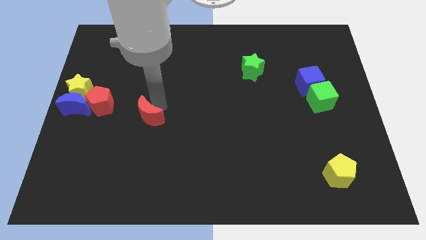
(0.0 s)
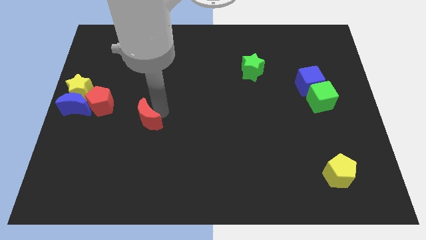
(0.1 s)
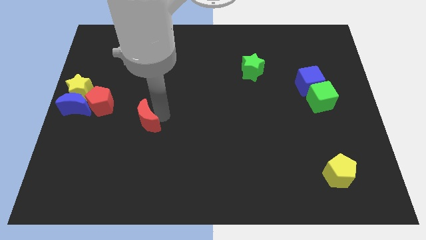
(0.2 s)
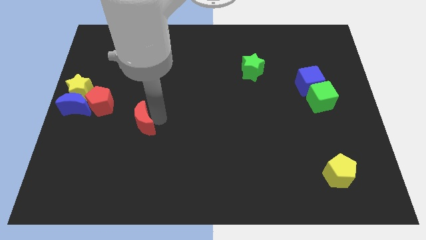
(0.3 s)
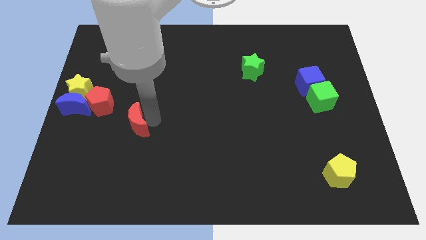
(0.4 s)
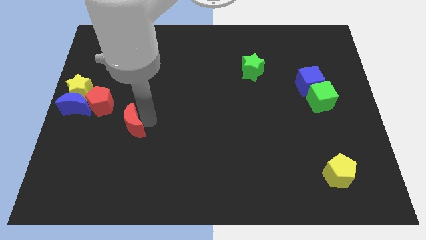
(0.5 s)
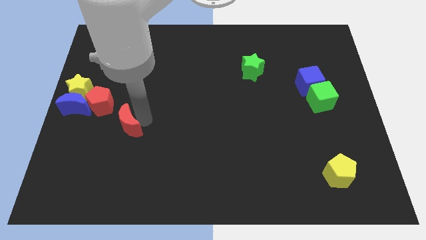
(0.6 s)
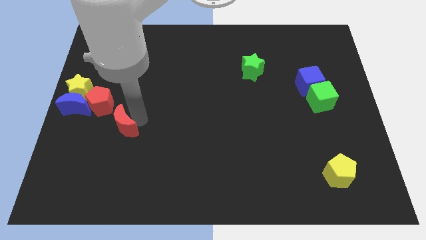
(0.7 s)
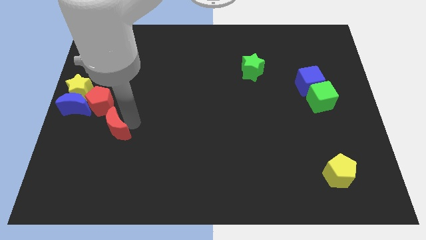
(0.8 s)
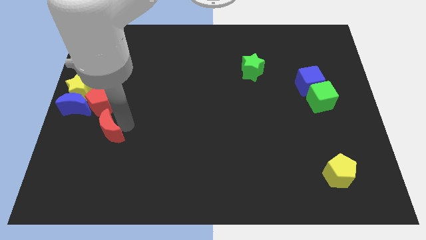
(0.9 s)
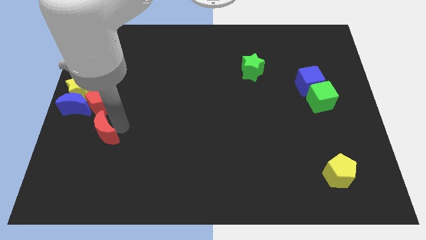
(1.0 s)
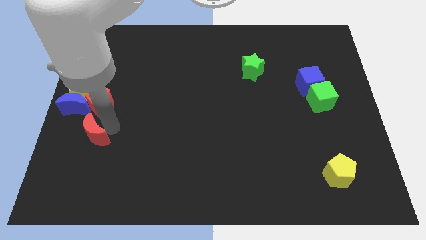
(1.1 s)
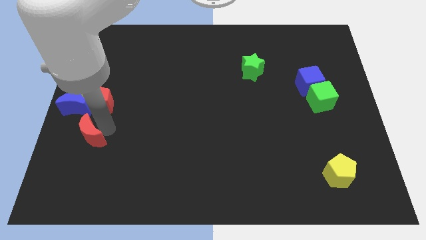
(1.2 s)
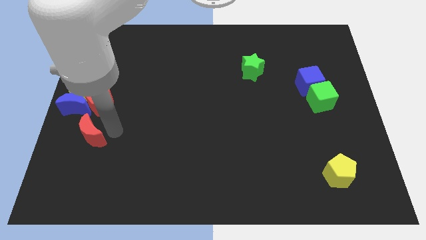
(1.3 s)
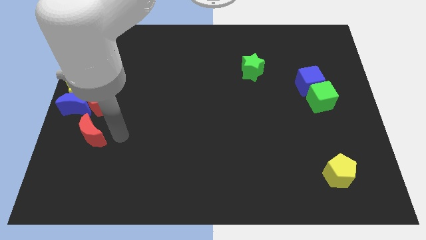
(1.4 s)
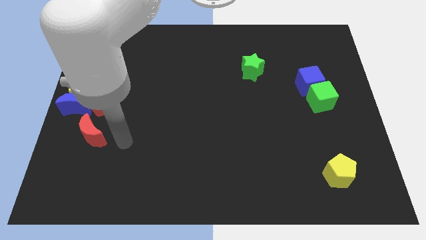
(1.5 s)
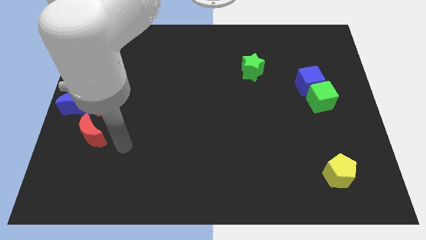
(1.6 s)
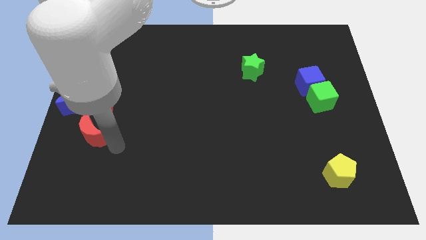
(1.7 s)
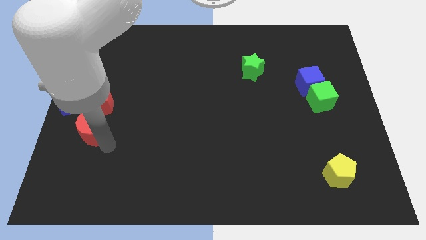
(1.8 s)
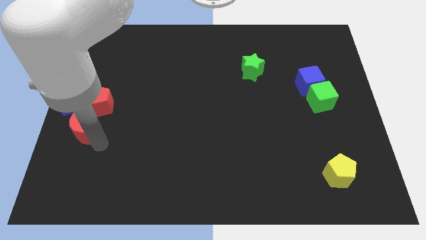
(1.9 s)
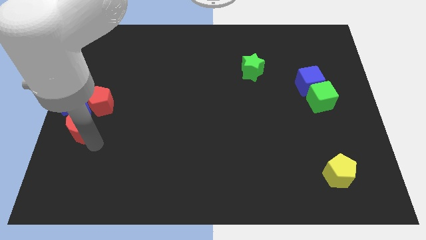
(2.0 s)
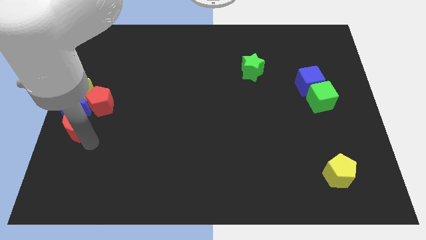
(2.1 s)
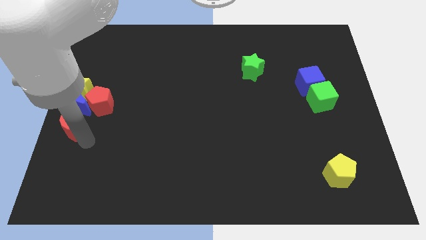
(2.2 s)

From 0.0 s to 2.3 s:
place the red moon below the blue moon

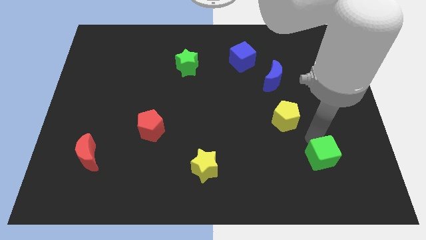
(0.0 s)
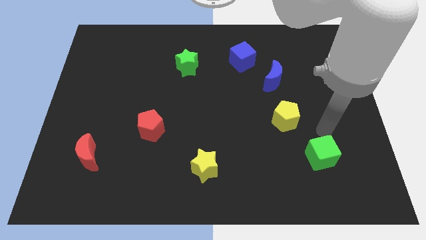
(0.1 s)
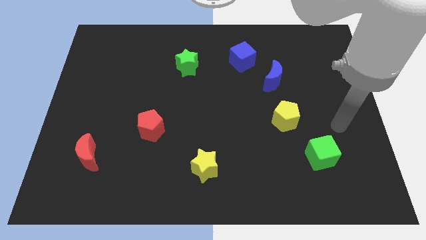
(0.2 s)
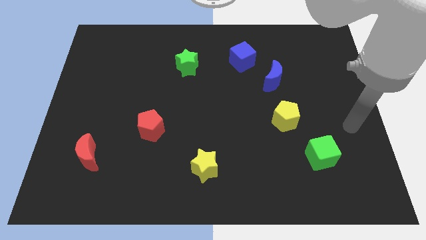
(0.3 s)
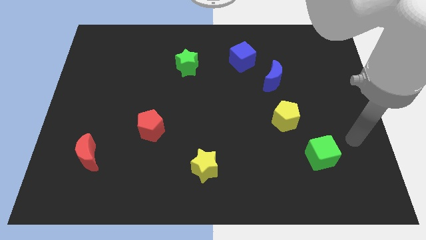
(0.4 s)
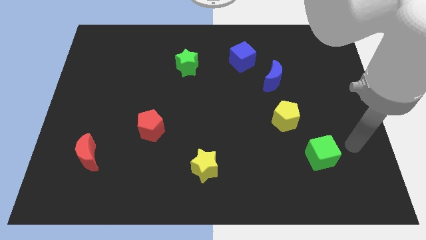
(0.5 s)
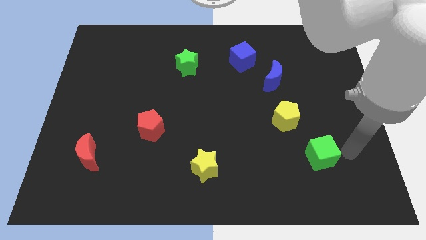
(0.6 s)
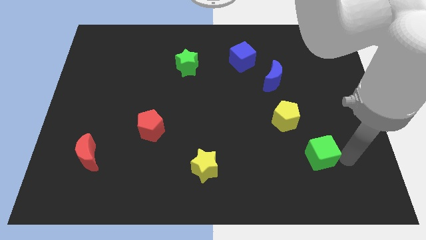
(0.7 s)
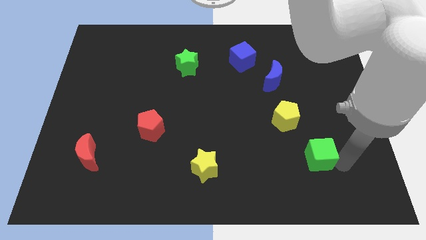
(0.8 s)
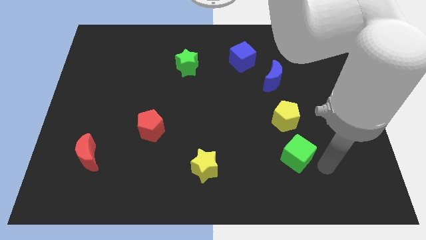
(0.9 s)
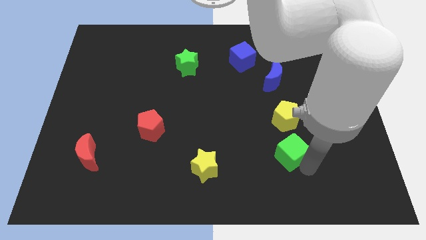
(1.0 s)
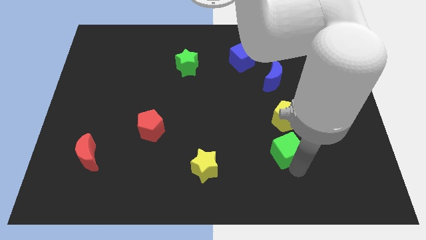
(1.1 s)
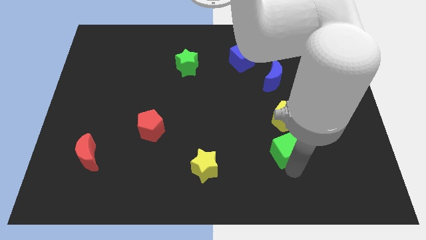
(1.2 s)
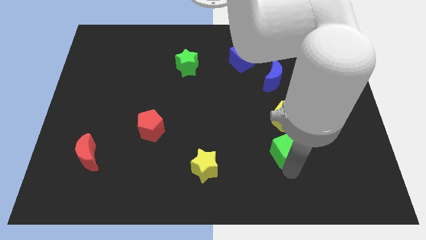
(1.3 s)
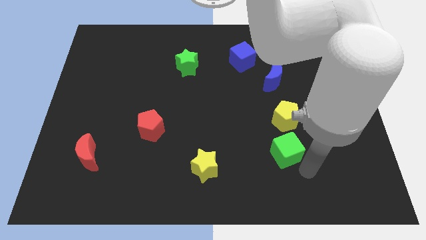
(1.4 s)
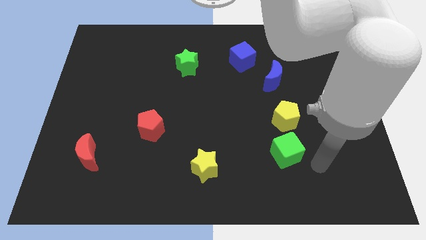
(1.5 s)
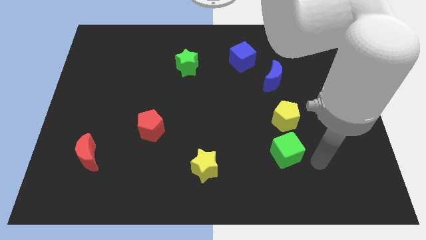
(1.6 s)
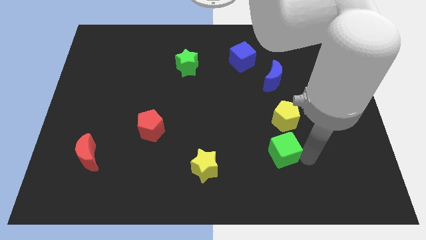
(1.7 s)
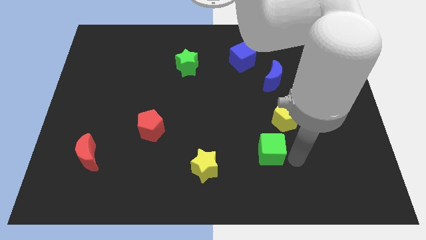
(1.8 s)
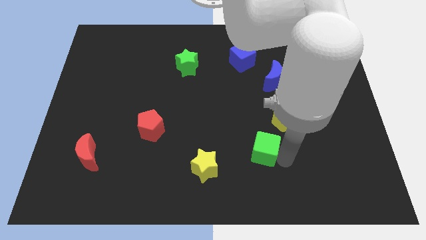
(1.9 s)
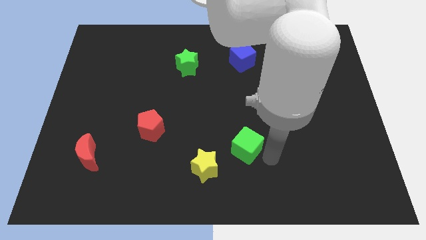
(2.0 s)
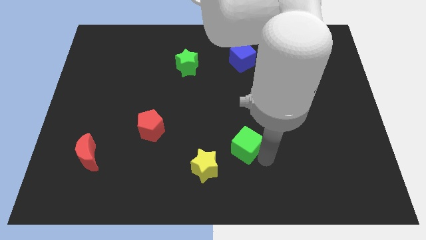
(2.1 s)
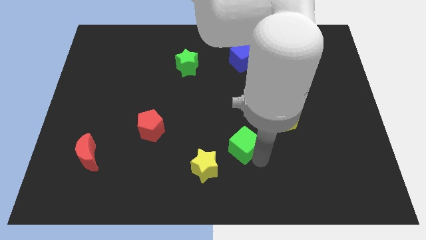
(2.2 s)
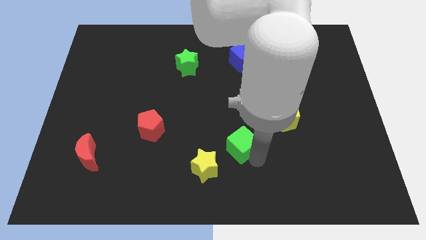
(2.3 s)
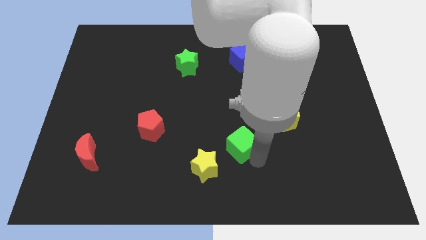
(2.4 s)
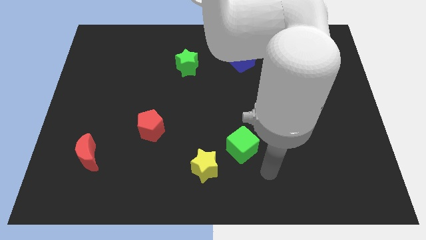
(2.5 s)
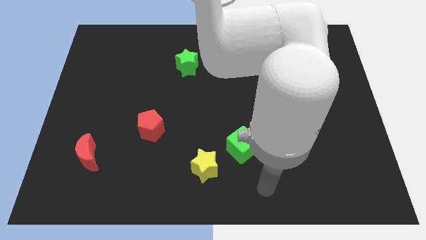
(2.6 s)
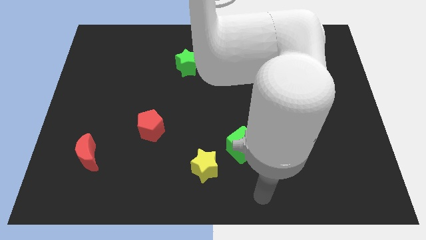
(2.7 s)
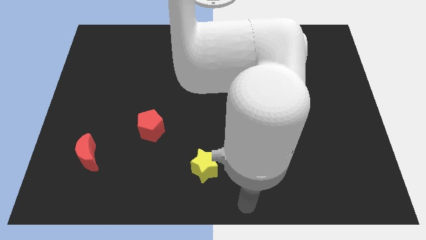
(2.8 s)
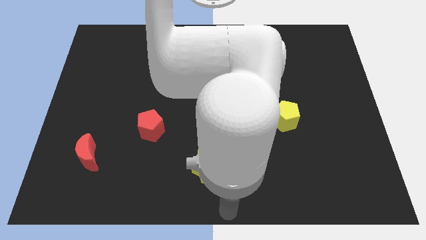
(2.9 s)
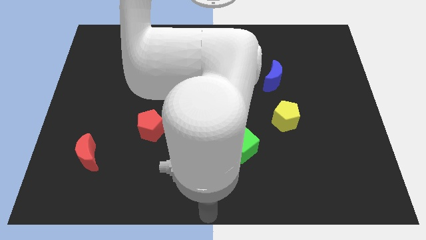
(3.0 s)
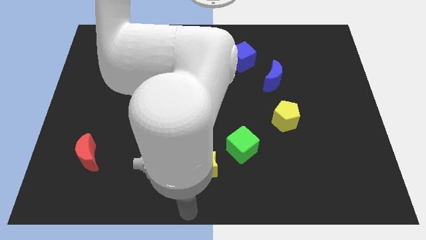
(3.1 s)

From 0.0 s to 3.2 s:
move the green cube to the right of the yellow star

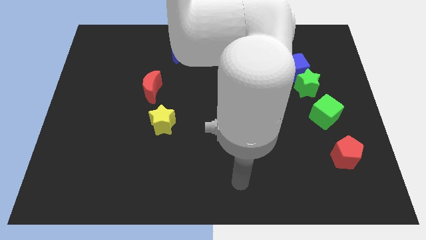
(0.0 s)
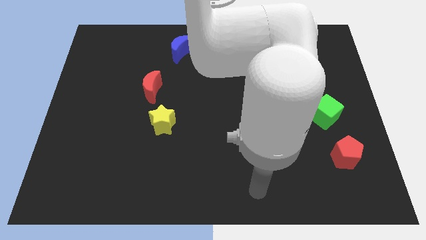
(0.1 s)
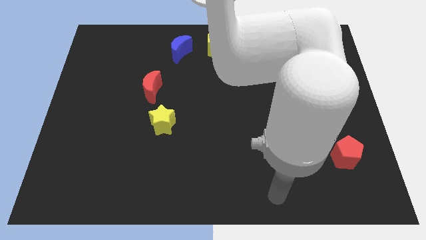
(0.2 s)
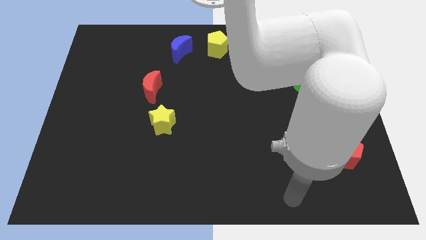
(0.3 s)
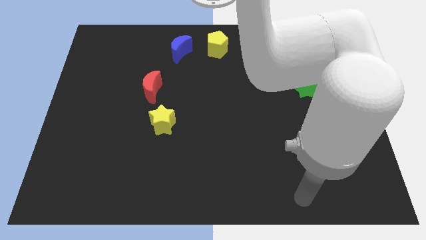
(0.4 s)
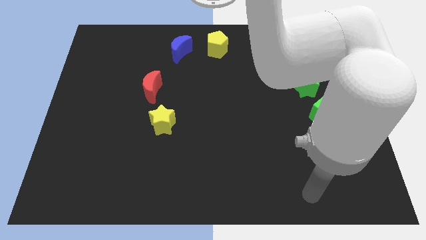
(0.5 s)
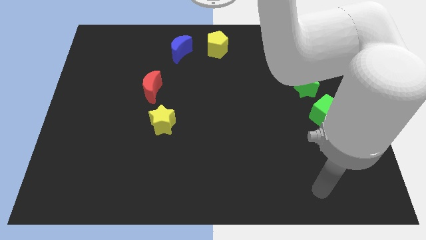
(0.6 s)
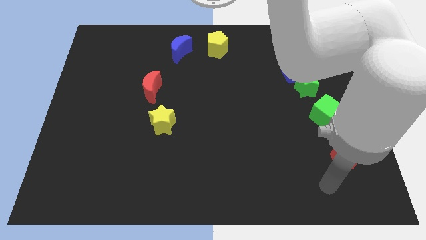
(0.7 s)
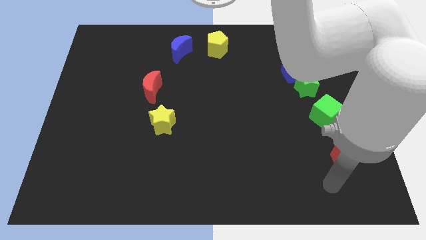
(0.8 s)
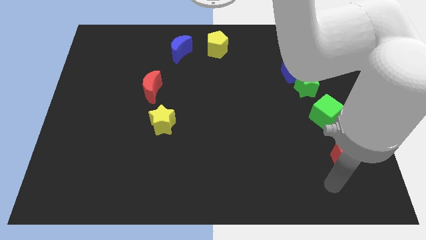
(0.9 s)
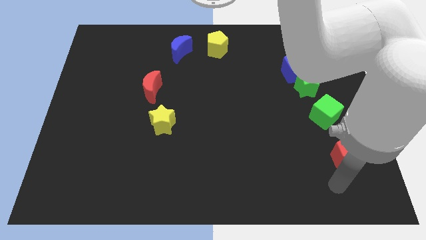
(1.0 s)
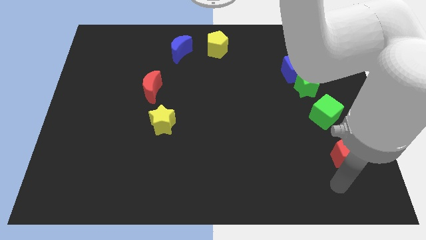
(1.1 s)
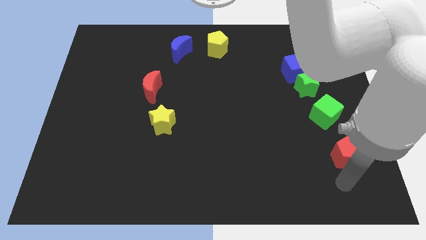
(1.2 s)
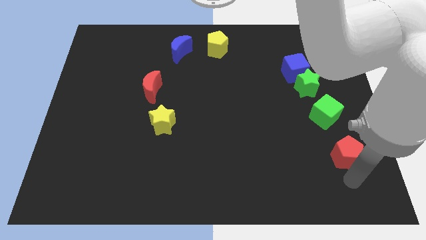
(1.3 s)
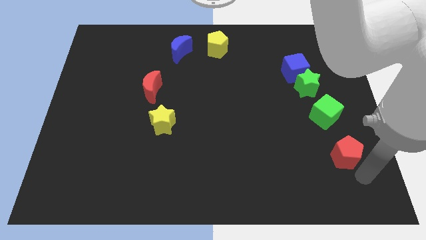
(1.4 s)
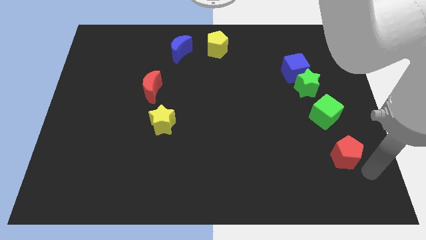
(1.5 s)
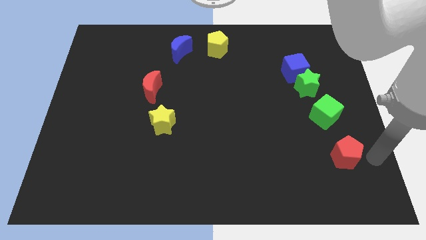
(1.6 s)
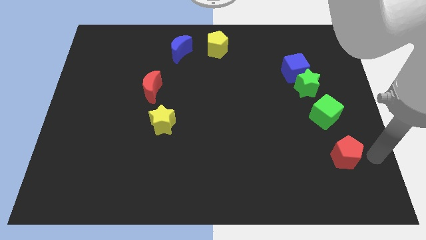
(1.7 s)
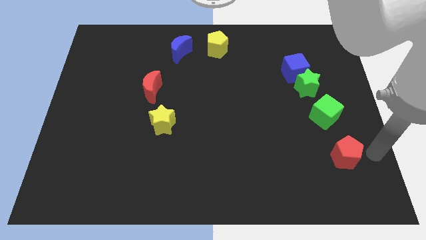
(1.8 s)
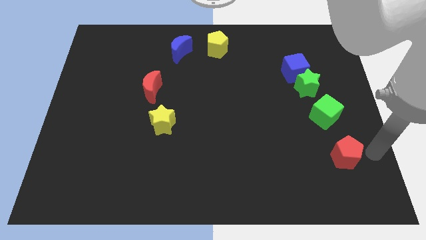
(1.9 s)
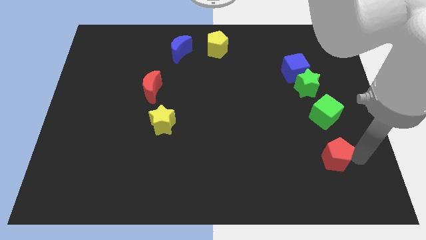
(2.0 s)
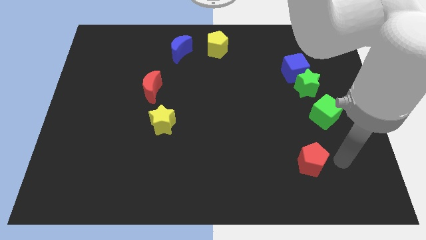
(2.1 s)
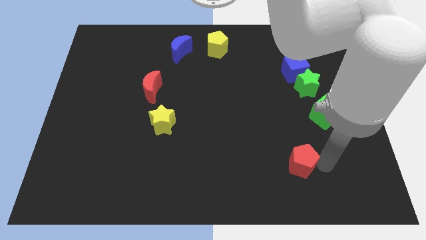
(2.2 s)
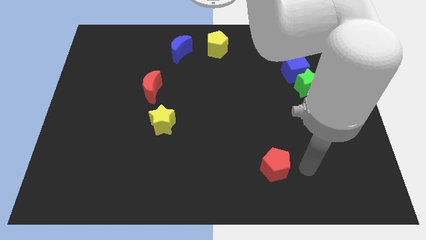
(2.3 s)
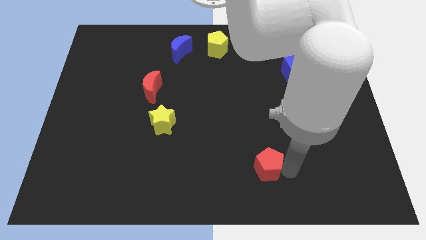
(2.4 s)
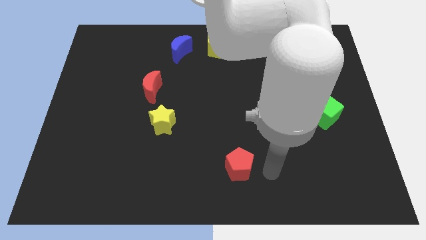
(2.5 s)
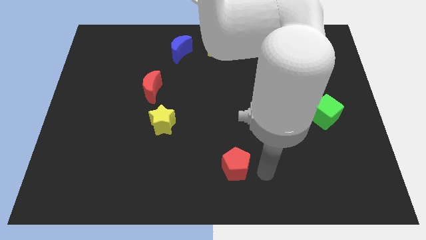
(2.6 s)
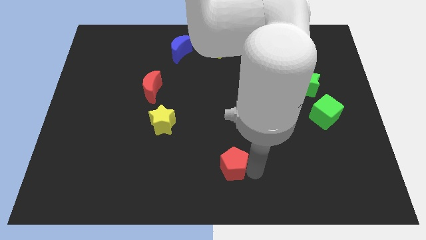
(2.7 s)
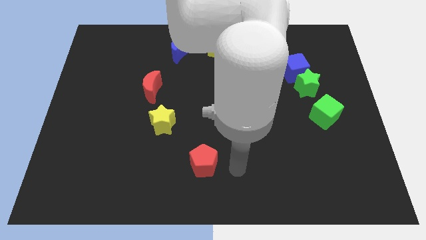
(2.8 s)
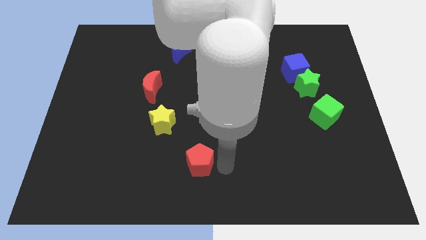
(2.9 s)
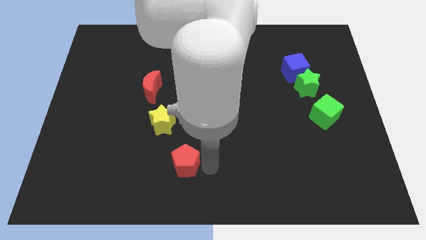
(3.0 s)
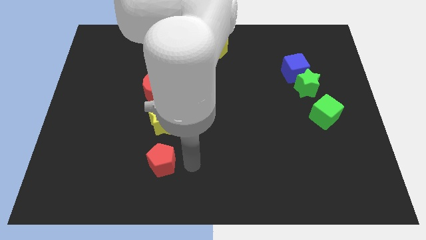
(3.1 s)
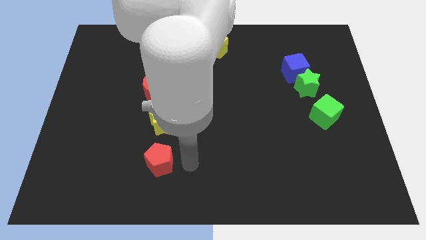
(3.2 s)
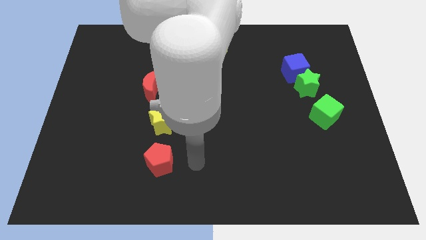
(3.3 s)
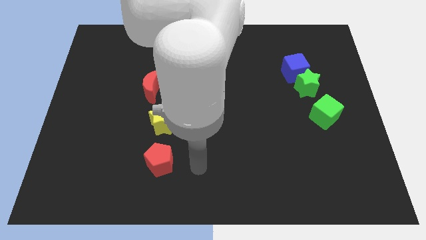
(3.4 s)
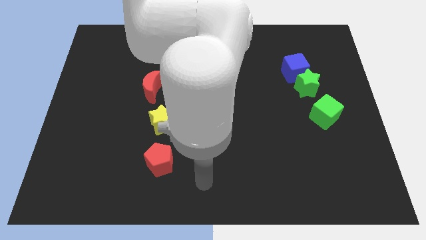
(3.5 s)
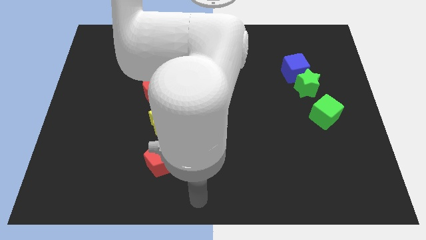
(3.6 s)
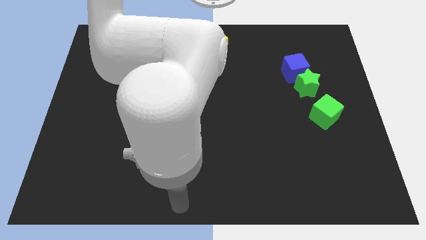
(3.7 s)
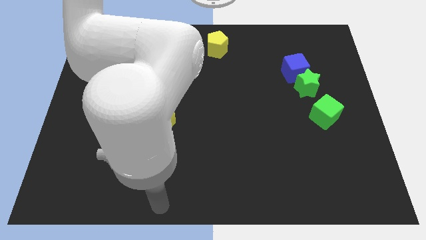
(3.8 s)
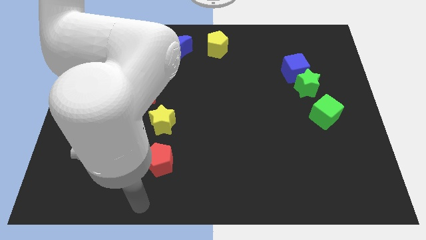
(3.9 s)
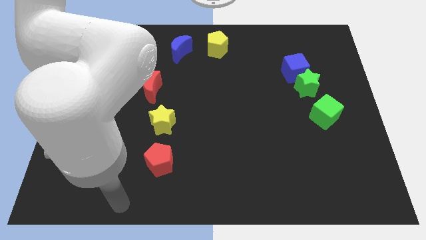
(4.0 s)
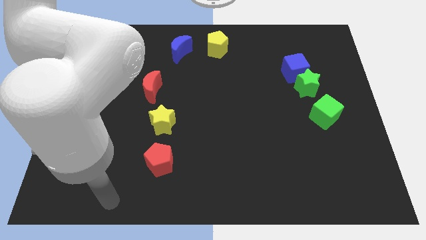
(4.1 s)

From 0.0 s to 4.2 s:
move the red pentagon below the yellow star
